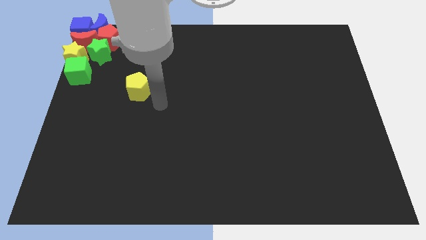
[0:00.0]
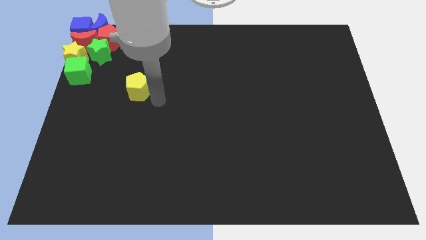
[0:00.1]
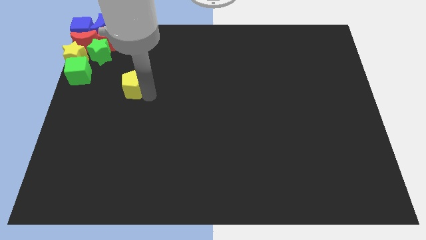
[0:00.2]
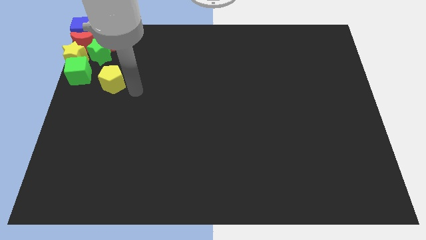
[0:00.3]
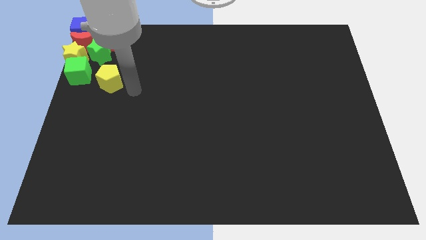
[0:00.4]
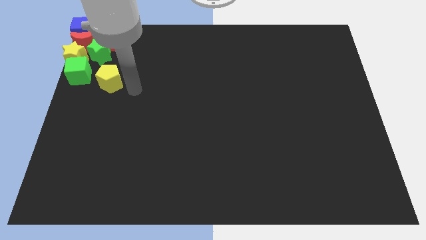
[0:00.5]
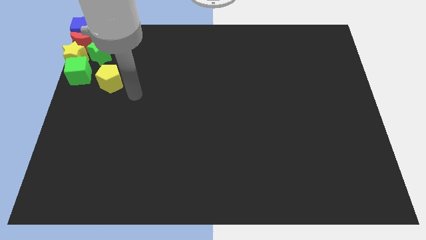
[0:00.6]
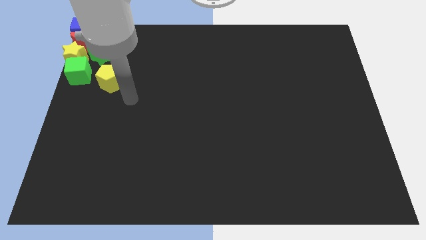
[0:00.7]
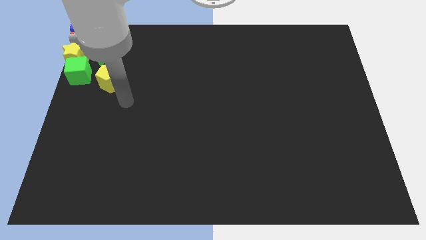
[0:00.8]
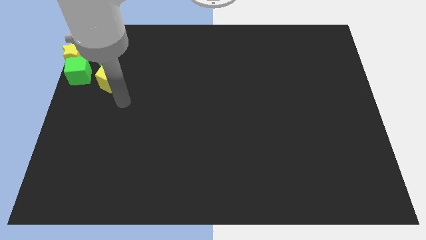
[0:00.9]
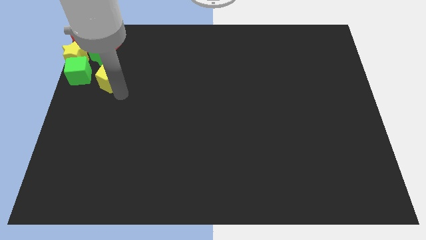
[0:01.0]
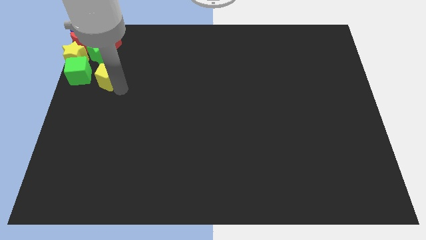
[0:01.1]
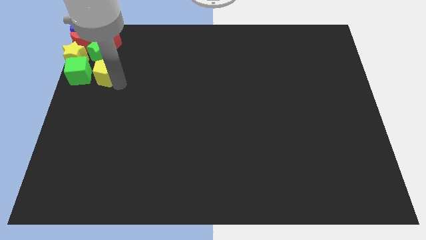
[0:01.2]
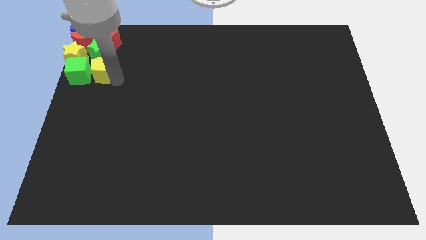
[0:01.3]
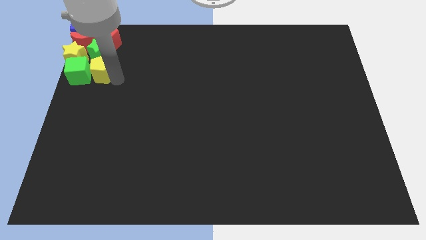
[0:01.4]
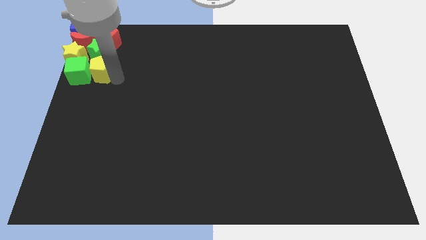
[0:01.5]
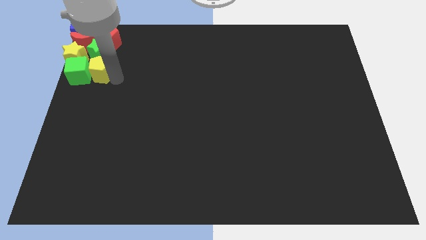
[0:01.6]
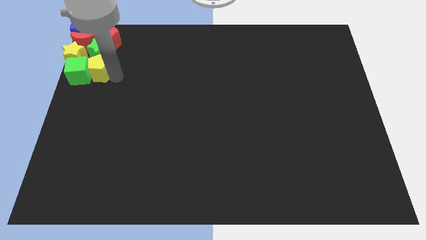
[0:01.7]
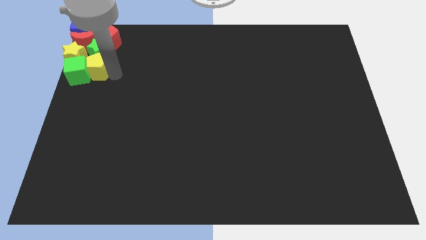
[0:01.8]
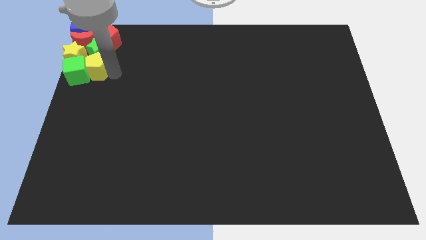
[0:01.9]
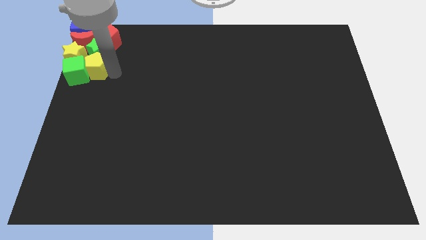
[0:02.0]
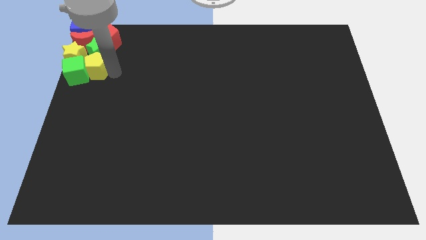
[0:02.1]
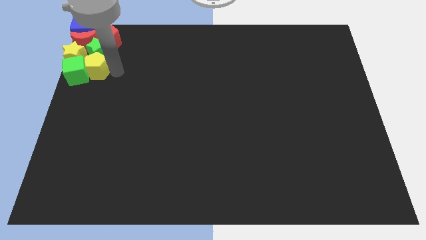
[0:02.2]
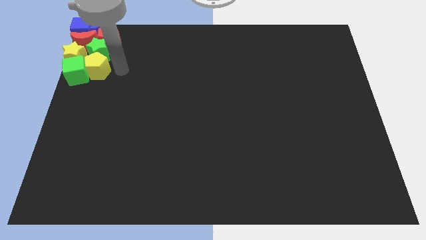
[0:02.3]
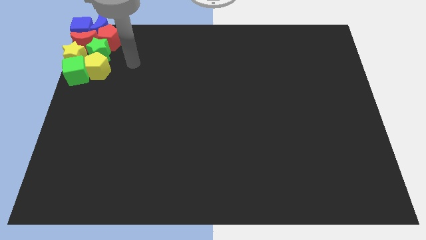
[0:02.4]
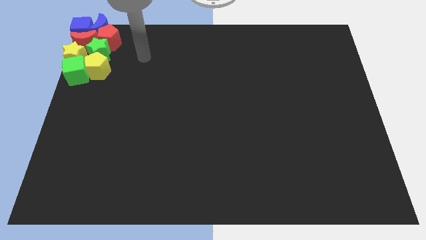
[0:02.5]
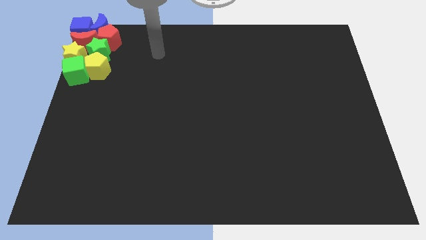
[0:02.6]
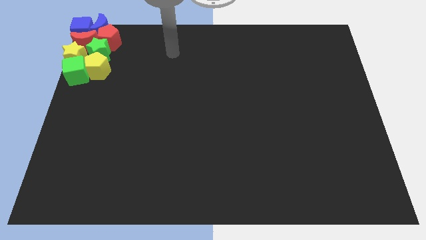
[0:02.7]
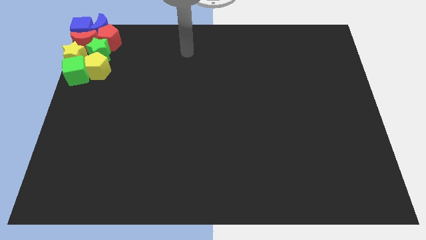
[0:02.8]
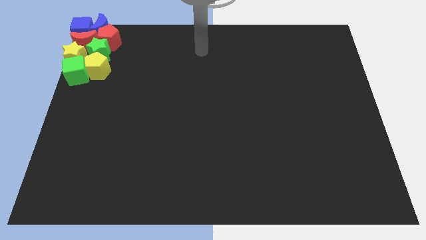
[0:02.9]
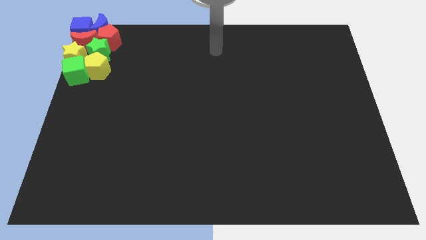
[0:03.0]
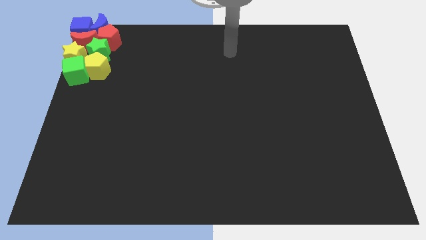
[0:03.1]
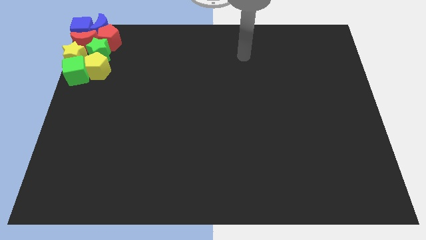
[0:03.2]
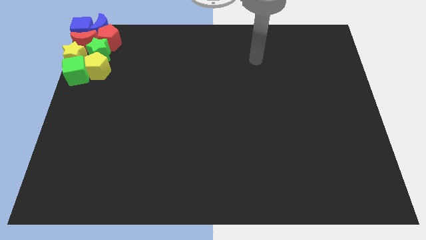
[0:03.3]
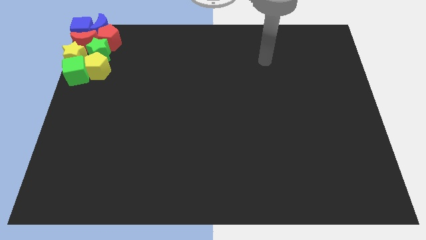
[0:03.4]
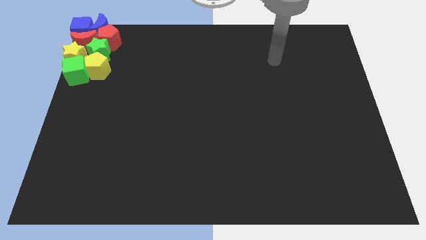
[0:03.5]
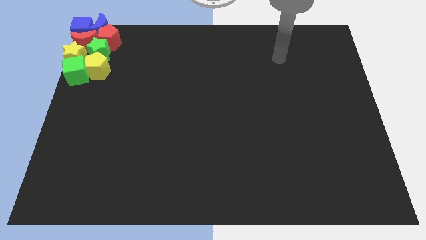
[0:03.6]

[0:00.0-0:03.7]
push the yellow pentagon into the group of blocks

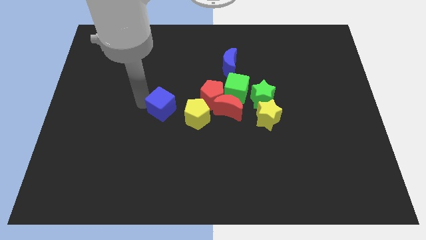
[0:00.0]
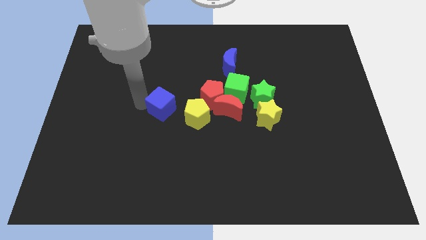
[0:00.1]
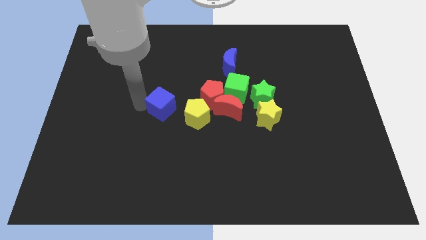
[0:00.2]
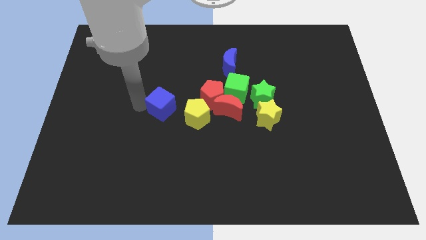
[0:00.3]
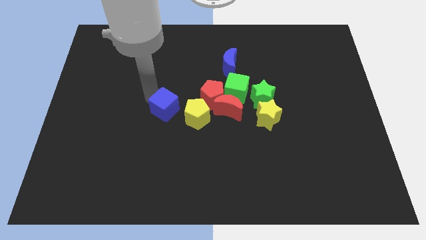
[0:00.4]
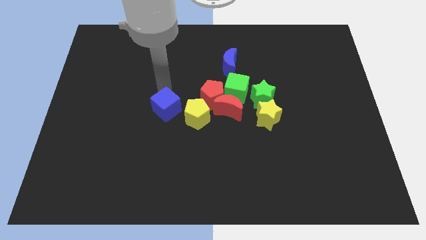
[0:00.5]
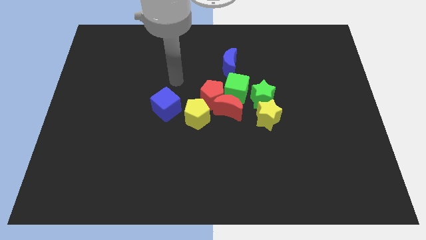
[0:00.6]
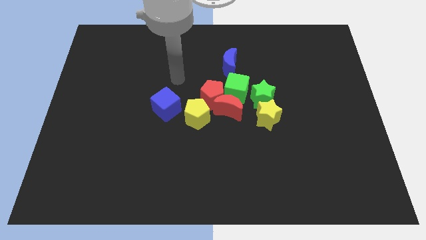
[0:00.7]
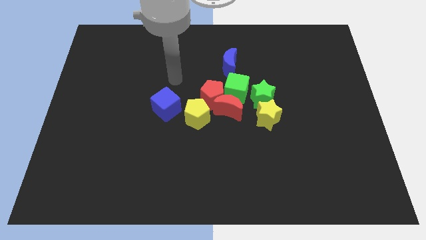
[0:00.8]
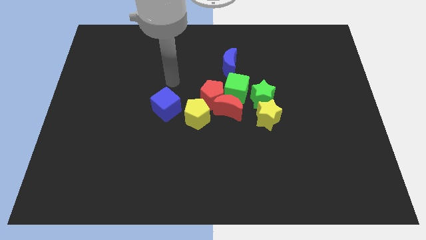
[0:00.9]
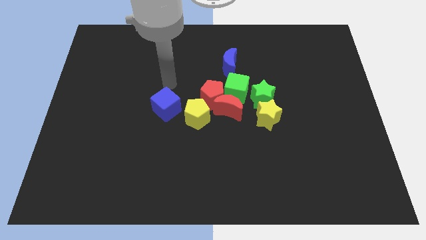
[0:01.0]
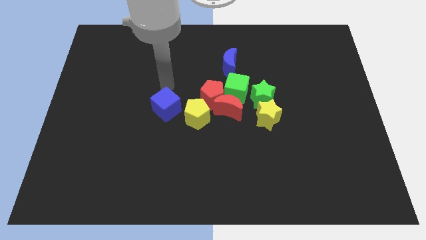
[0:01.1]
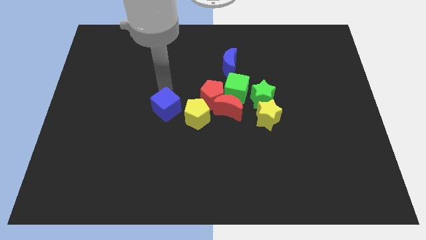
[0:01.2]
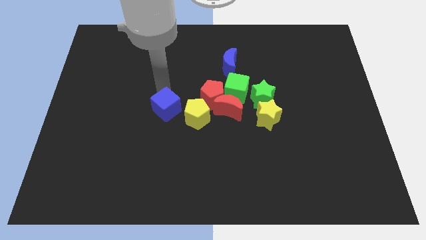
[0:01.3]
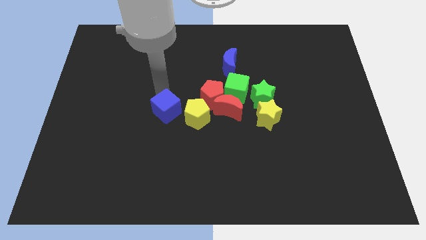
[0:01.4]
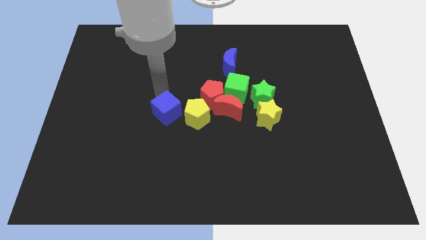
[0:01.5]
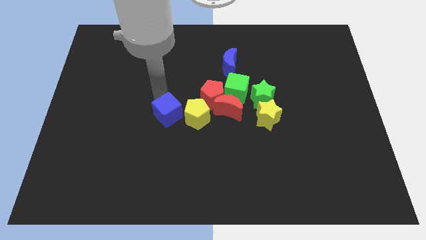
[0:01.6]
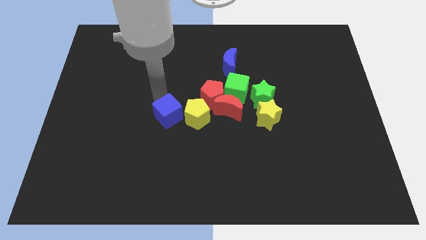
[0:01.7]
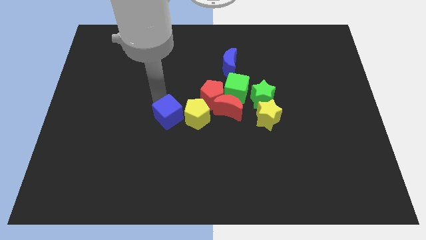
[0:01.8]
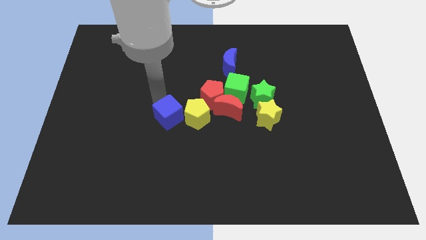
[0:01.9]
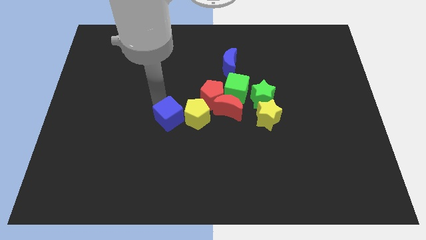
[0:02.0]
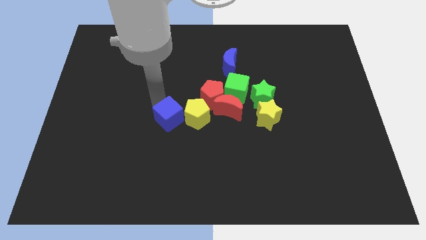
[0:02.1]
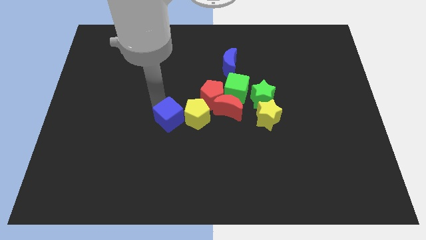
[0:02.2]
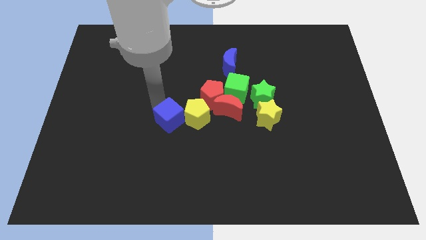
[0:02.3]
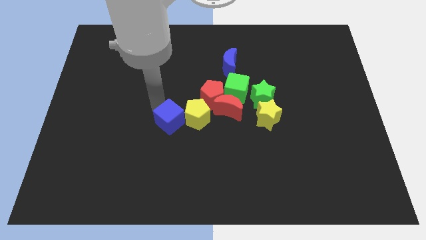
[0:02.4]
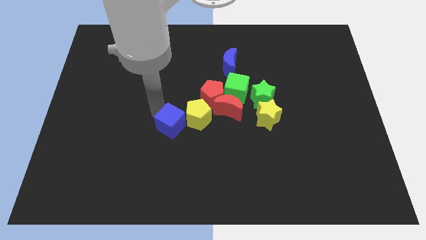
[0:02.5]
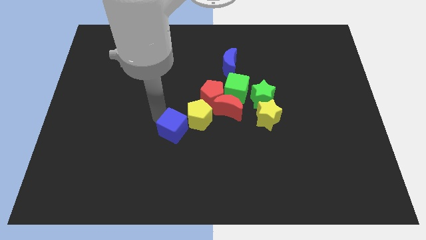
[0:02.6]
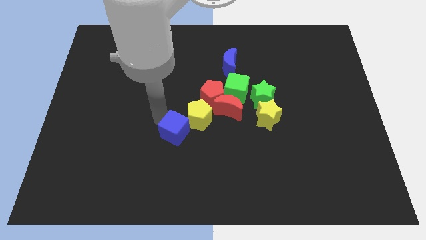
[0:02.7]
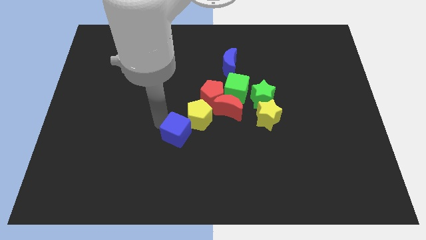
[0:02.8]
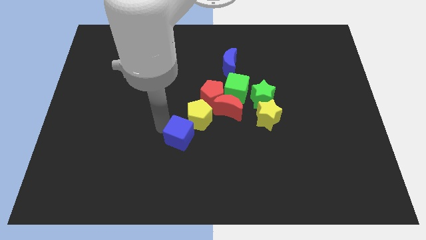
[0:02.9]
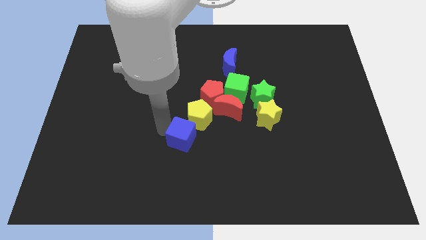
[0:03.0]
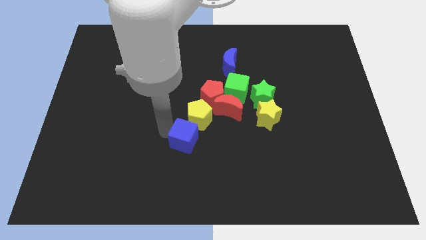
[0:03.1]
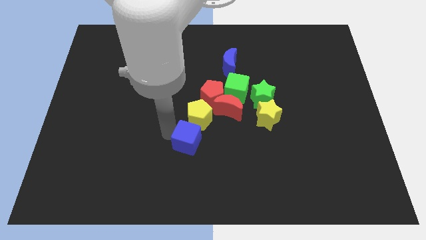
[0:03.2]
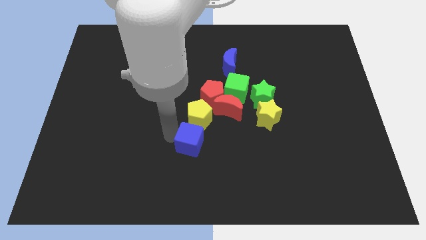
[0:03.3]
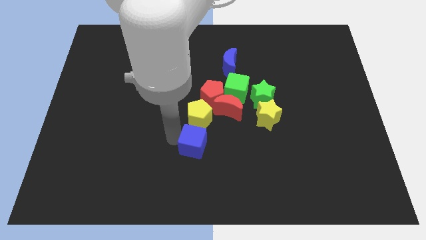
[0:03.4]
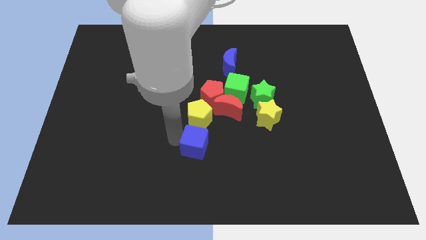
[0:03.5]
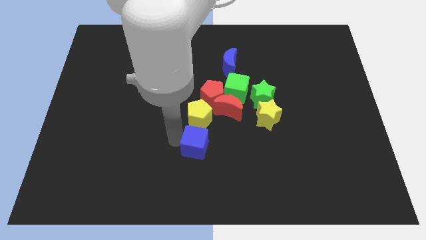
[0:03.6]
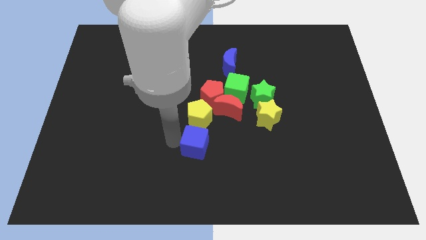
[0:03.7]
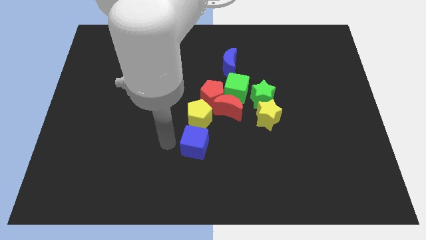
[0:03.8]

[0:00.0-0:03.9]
push the blue cube under the yellow pentagon

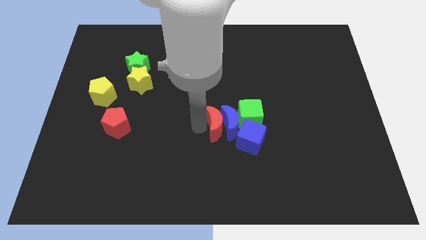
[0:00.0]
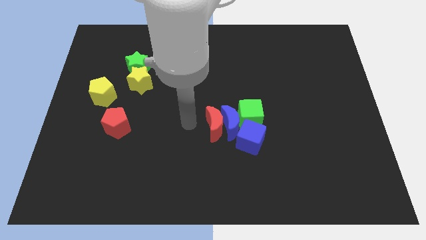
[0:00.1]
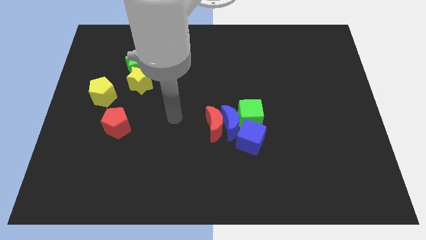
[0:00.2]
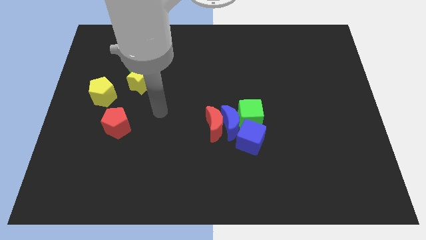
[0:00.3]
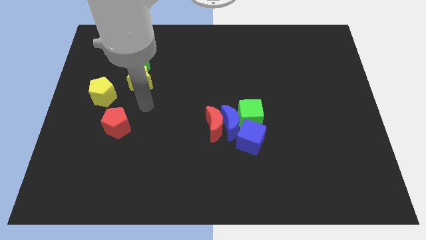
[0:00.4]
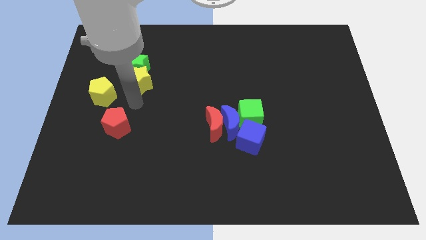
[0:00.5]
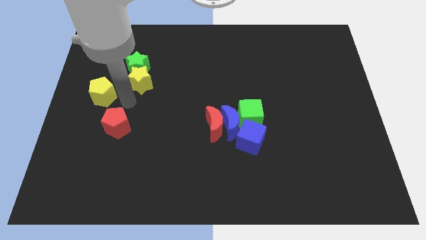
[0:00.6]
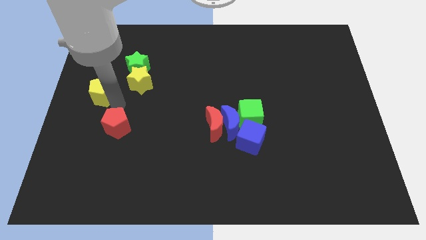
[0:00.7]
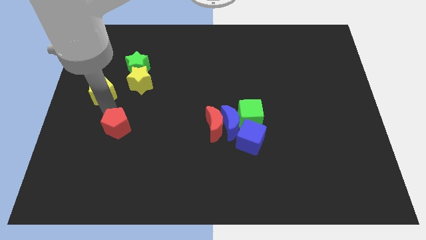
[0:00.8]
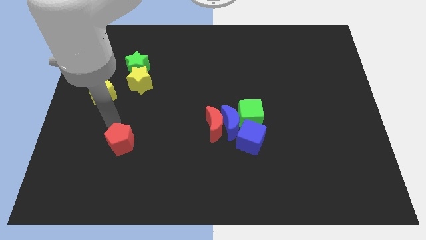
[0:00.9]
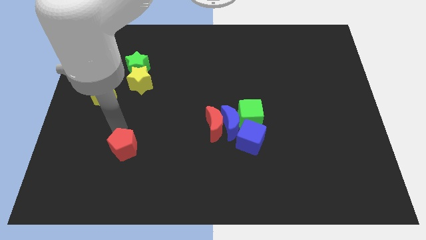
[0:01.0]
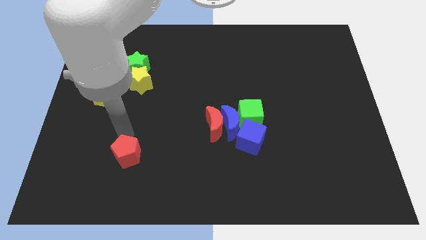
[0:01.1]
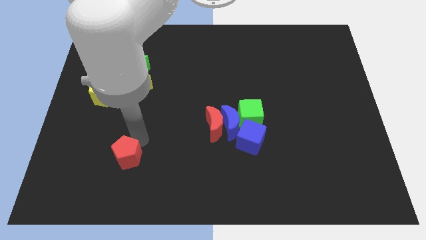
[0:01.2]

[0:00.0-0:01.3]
move your arm into the red pentagon

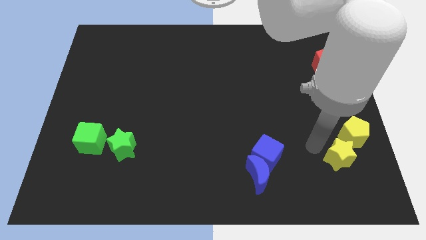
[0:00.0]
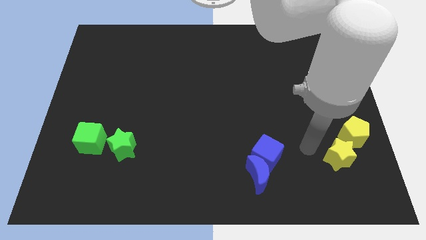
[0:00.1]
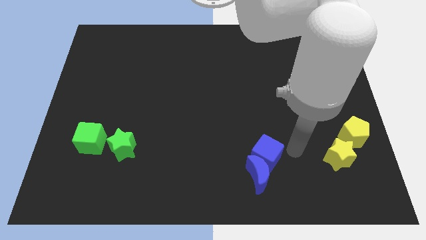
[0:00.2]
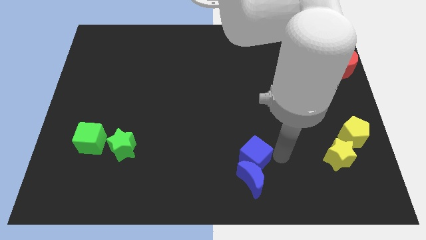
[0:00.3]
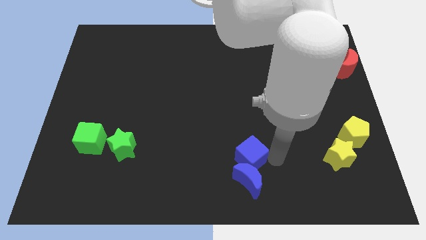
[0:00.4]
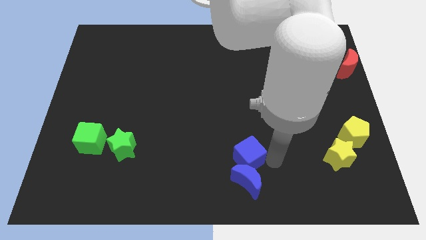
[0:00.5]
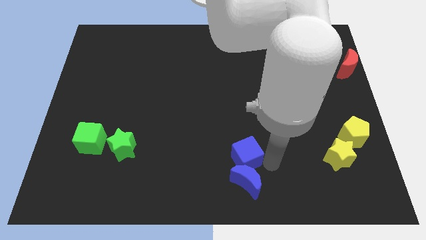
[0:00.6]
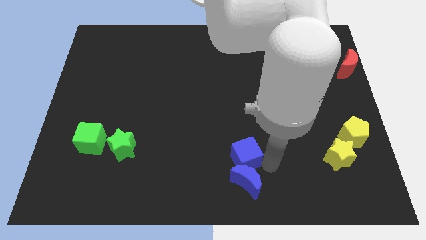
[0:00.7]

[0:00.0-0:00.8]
push the blue cube towards left
